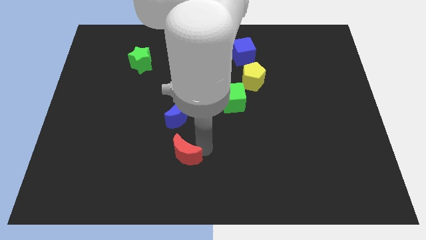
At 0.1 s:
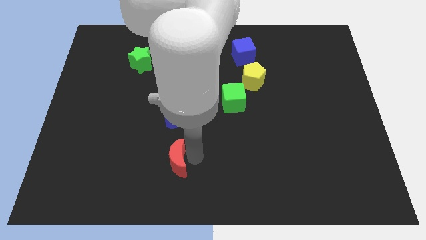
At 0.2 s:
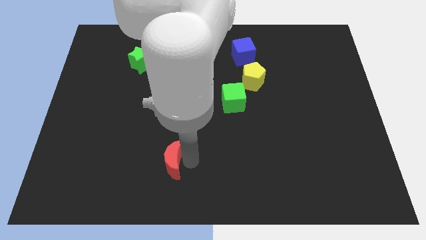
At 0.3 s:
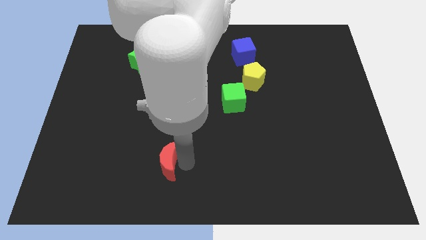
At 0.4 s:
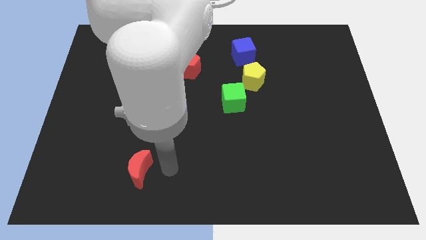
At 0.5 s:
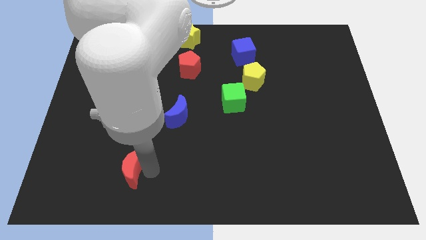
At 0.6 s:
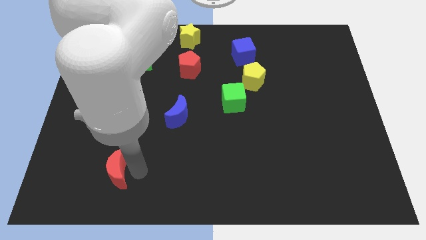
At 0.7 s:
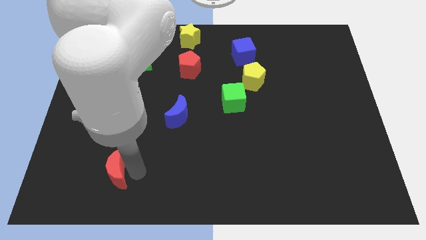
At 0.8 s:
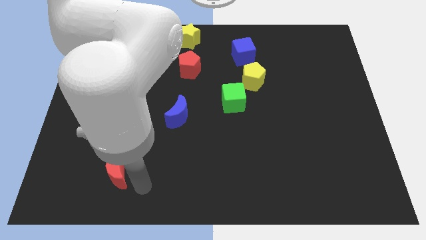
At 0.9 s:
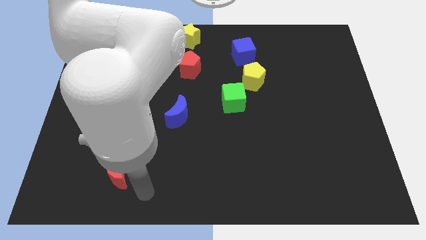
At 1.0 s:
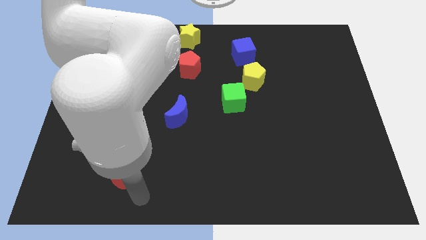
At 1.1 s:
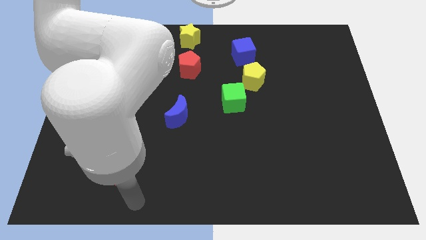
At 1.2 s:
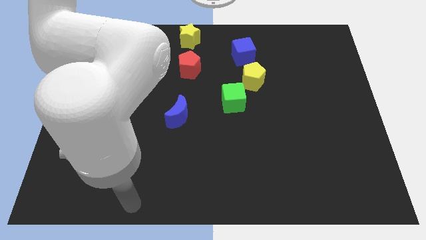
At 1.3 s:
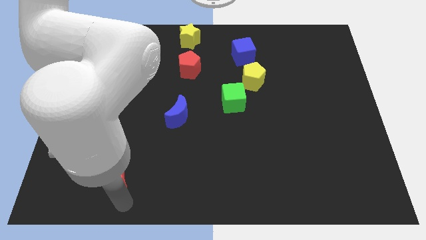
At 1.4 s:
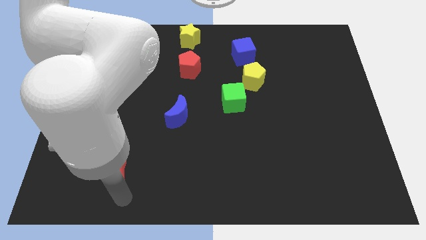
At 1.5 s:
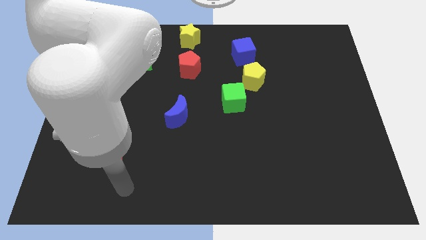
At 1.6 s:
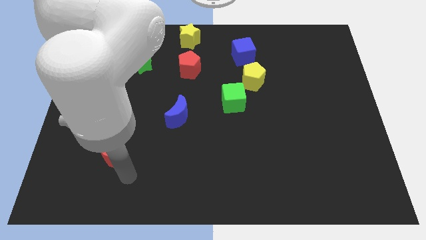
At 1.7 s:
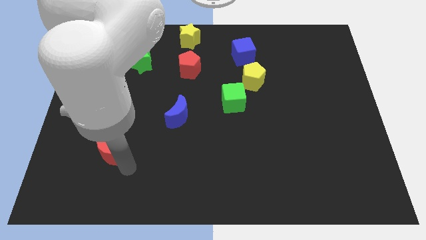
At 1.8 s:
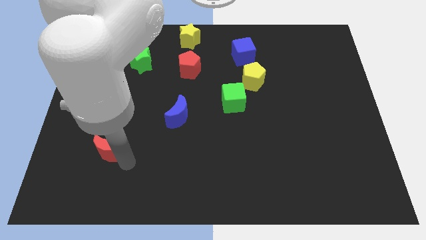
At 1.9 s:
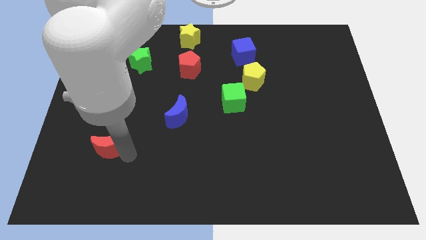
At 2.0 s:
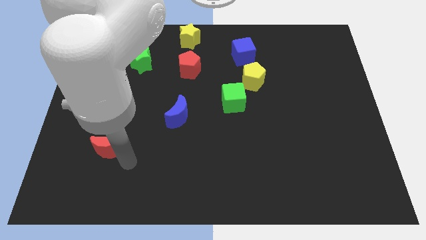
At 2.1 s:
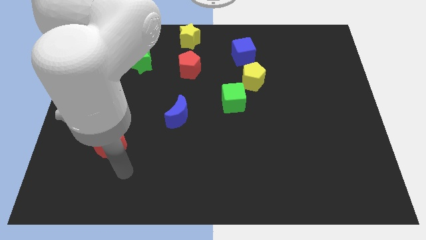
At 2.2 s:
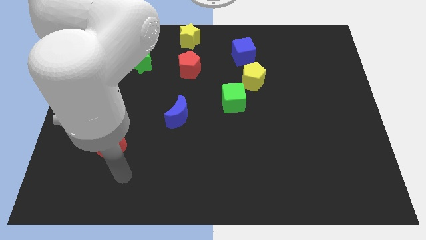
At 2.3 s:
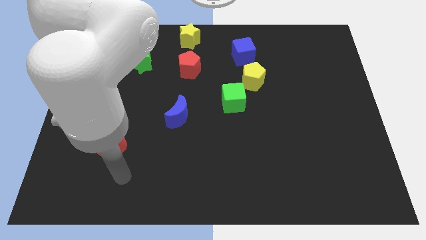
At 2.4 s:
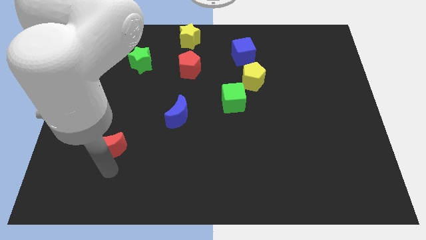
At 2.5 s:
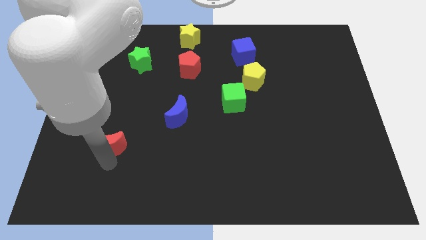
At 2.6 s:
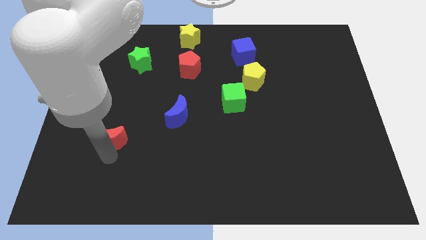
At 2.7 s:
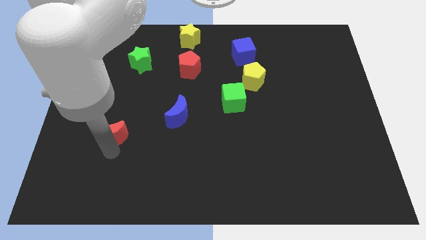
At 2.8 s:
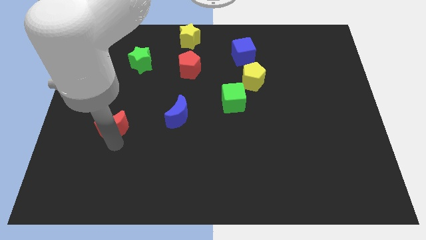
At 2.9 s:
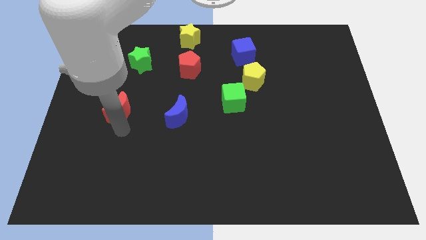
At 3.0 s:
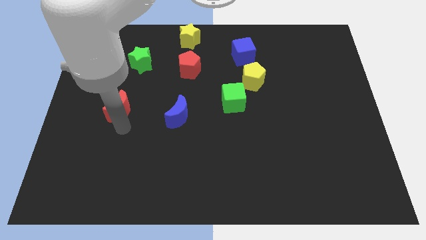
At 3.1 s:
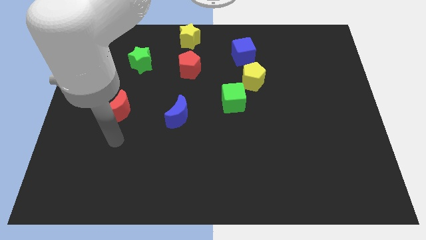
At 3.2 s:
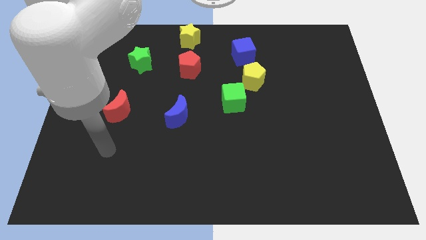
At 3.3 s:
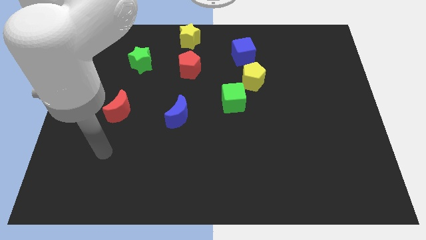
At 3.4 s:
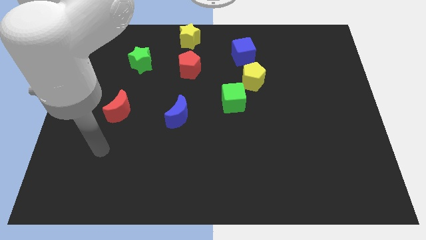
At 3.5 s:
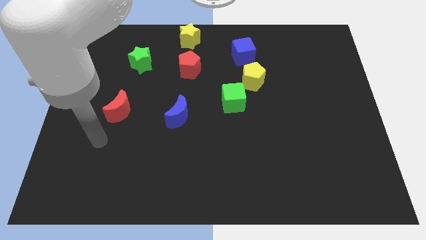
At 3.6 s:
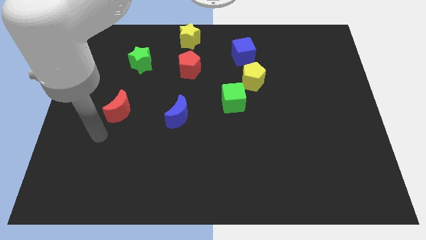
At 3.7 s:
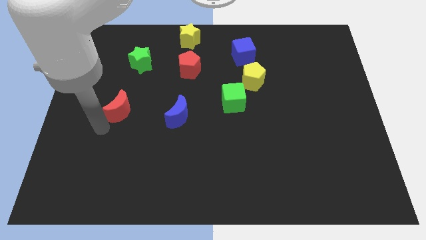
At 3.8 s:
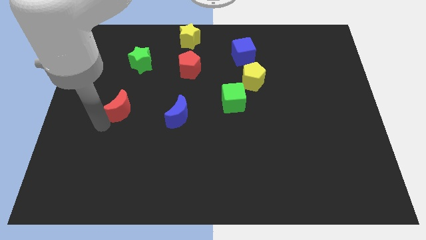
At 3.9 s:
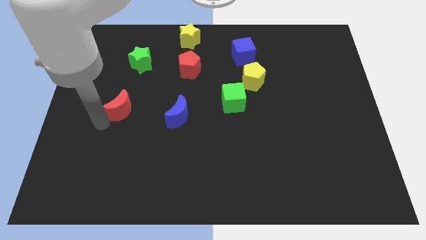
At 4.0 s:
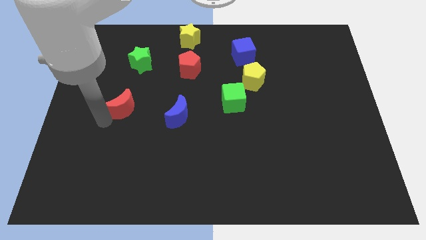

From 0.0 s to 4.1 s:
push the red crescent upwards

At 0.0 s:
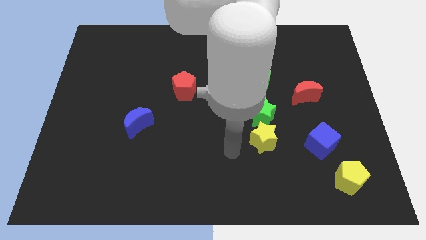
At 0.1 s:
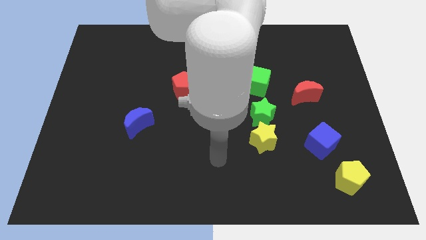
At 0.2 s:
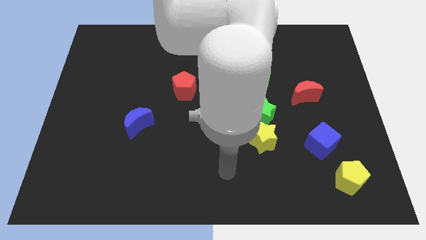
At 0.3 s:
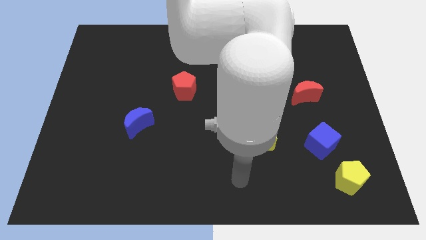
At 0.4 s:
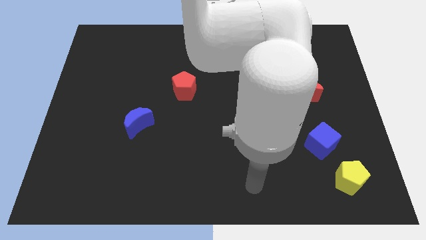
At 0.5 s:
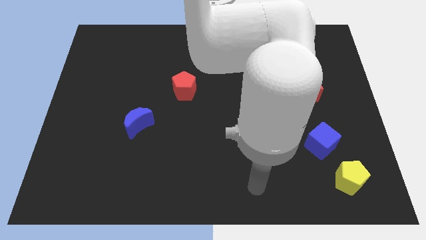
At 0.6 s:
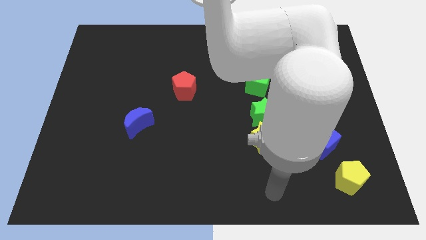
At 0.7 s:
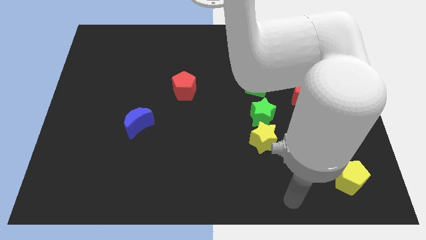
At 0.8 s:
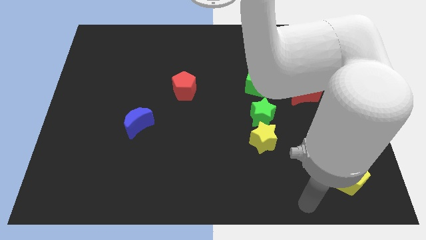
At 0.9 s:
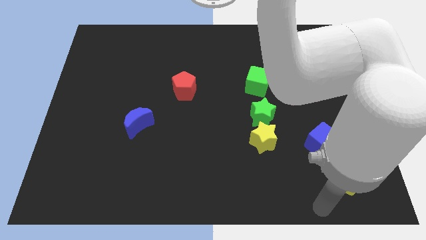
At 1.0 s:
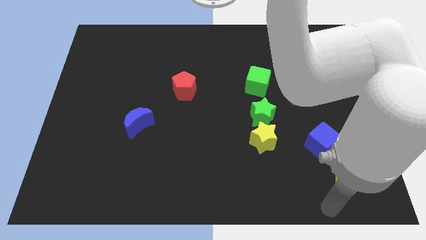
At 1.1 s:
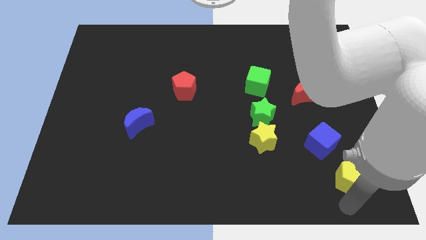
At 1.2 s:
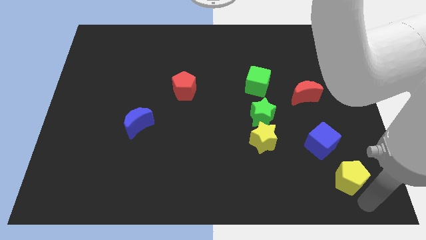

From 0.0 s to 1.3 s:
move your arm towards the bottom right corner of the board

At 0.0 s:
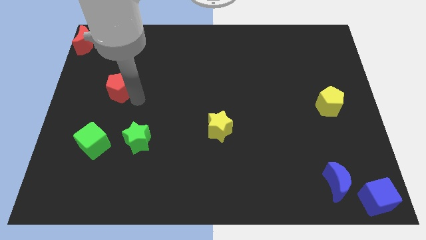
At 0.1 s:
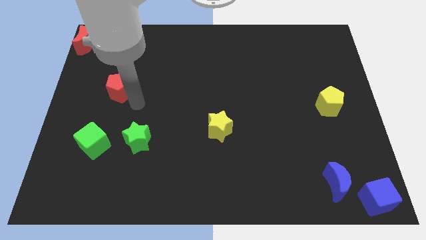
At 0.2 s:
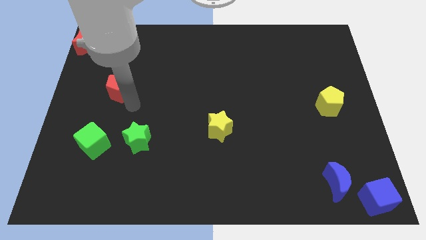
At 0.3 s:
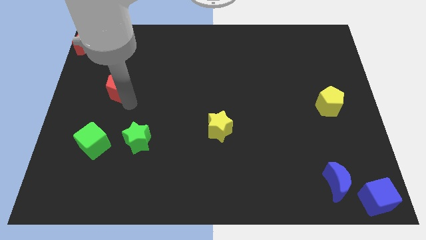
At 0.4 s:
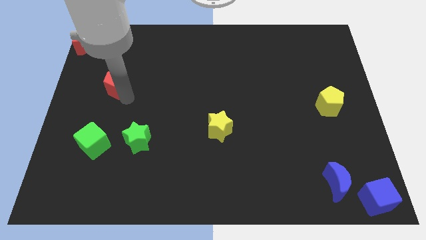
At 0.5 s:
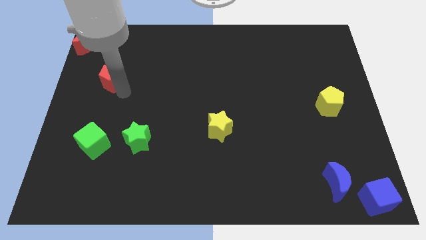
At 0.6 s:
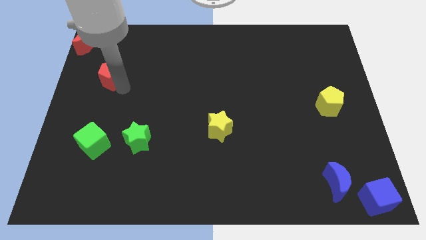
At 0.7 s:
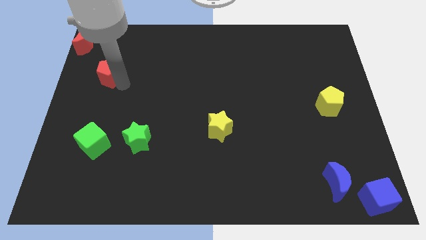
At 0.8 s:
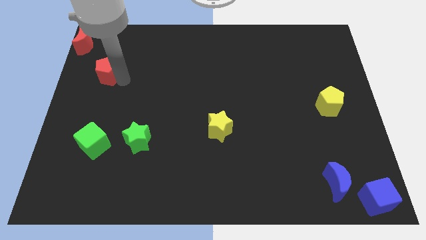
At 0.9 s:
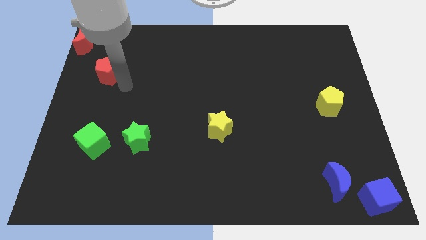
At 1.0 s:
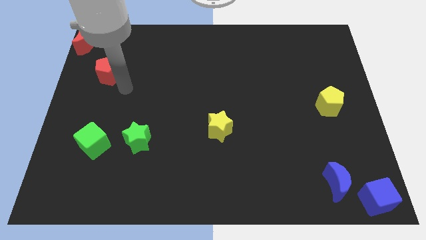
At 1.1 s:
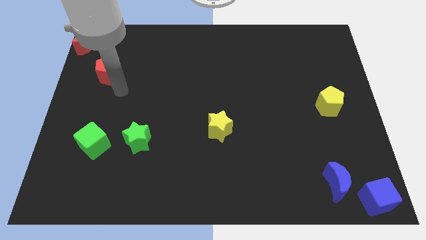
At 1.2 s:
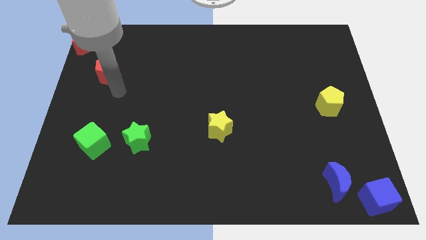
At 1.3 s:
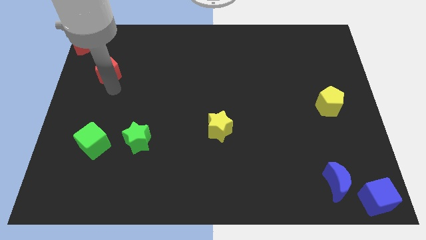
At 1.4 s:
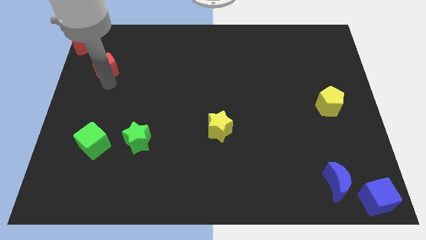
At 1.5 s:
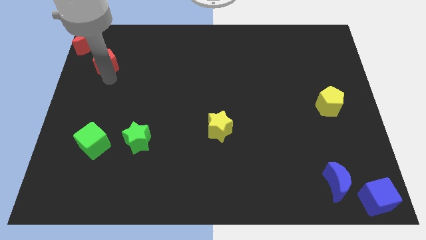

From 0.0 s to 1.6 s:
place the red pentagon above the green cube

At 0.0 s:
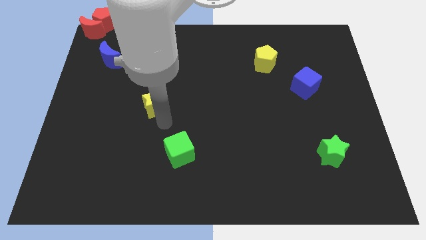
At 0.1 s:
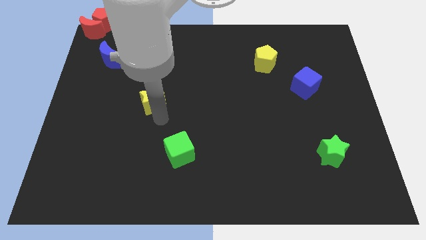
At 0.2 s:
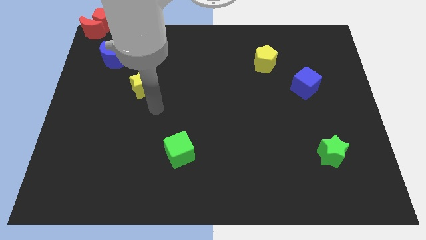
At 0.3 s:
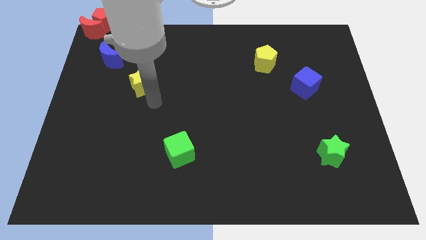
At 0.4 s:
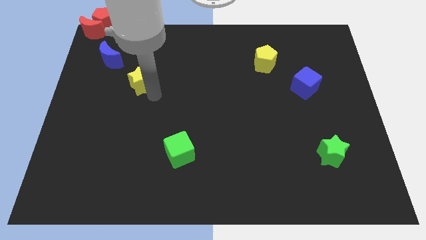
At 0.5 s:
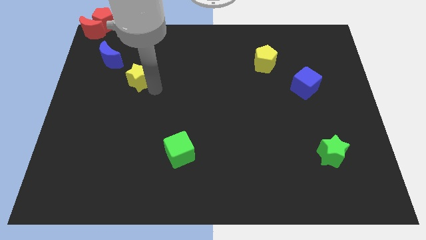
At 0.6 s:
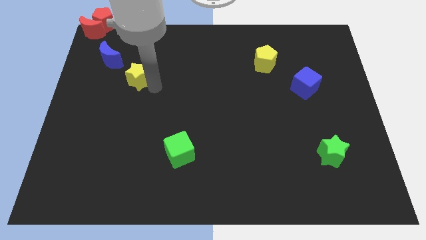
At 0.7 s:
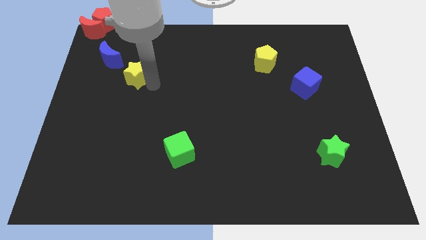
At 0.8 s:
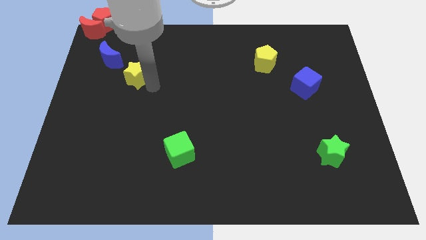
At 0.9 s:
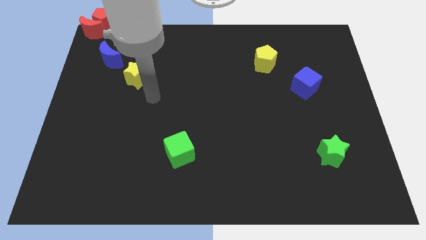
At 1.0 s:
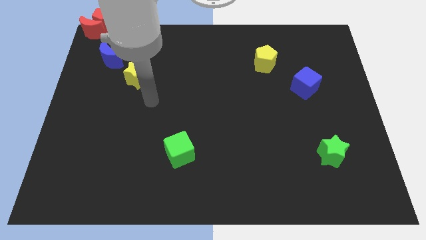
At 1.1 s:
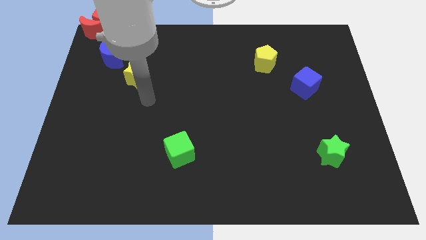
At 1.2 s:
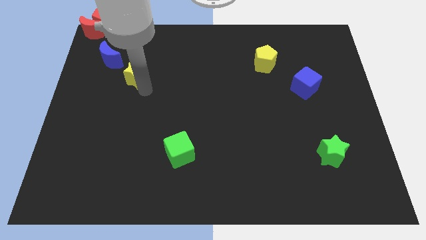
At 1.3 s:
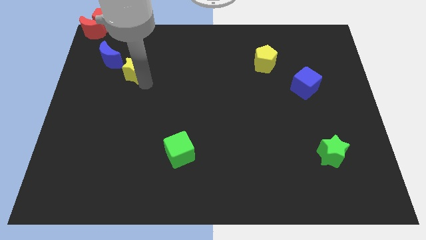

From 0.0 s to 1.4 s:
place the yellow star diagonally bottom right to blue moon

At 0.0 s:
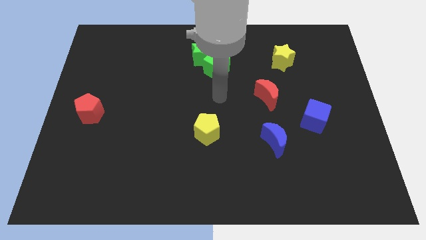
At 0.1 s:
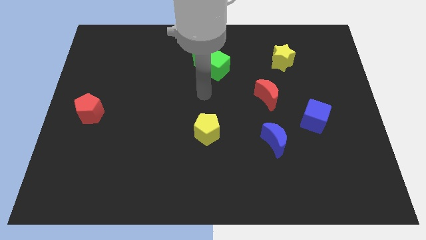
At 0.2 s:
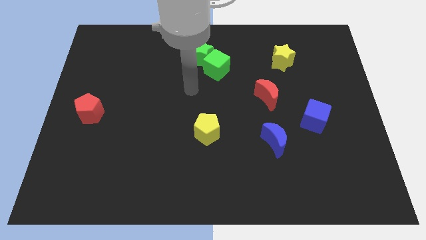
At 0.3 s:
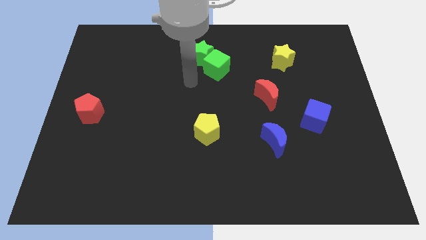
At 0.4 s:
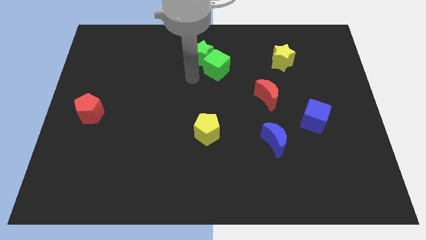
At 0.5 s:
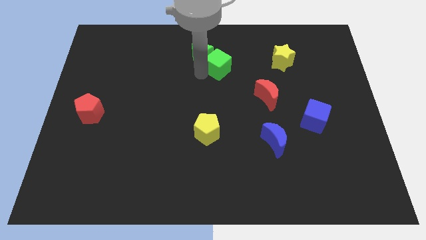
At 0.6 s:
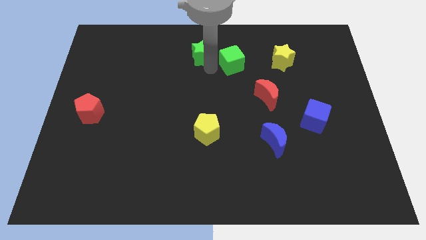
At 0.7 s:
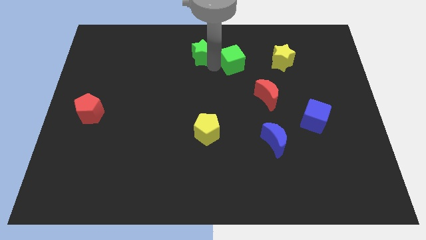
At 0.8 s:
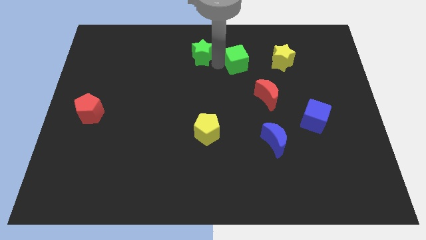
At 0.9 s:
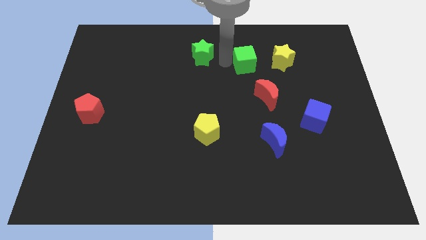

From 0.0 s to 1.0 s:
separate the green star and the green cube
